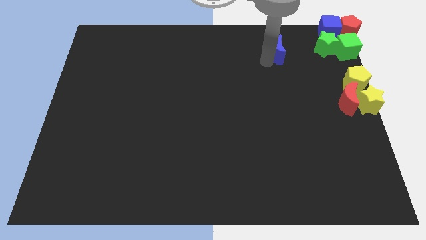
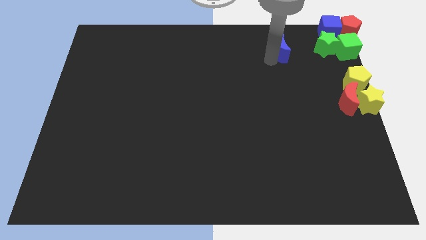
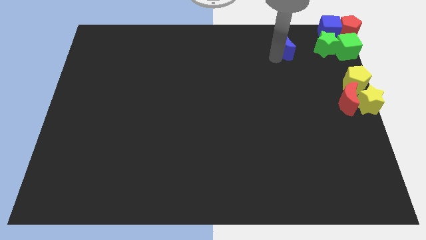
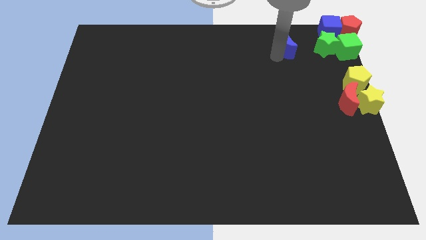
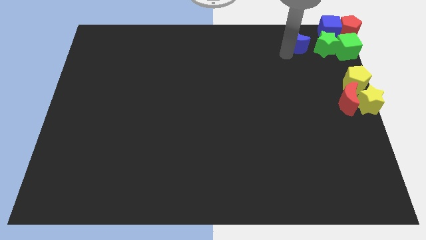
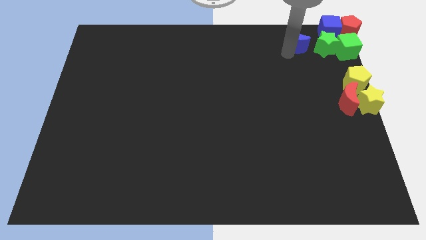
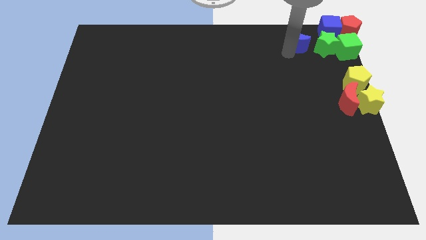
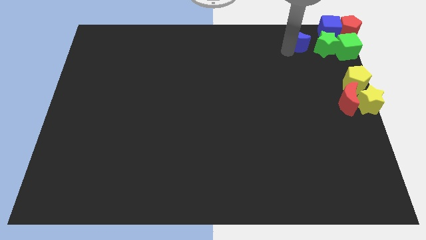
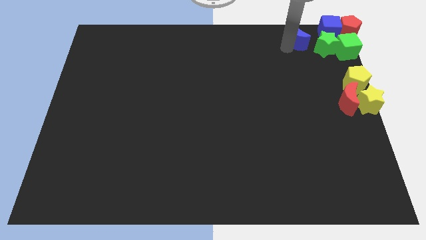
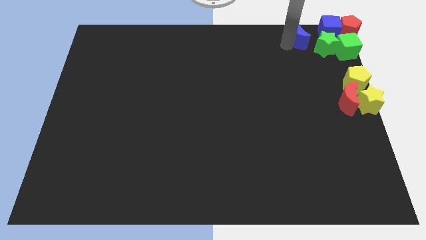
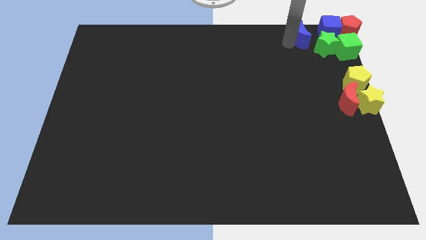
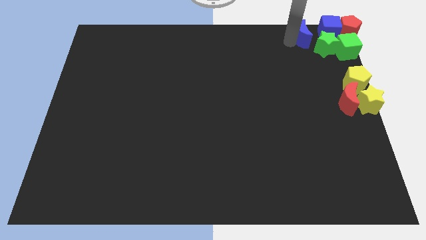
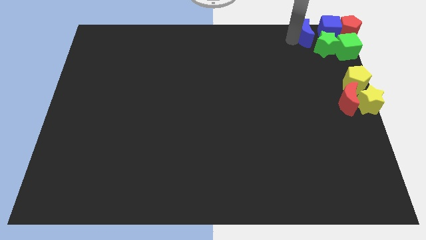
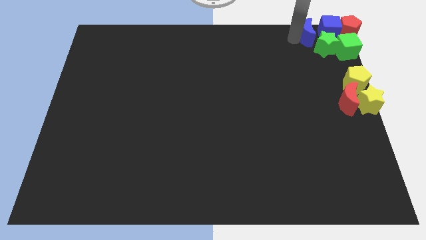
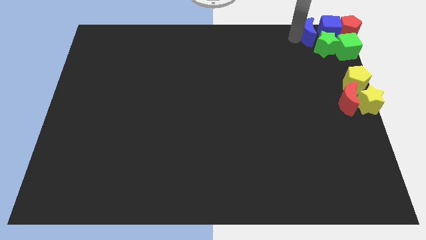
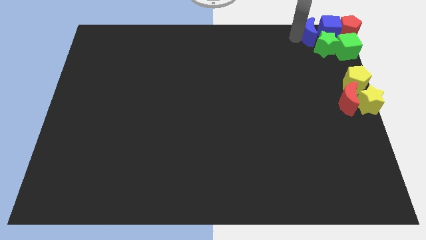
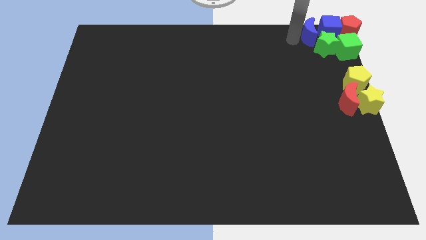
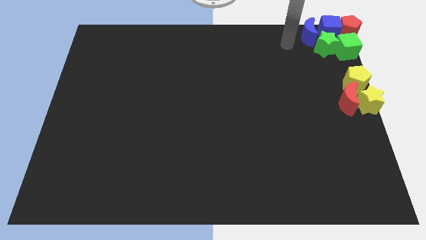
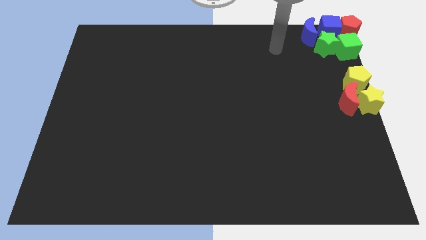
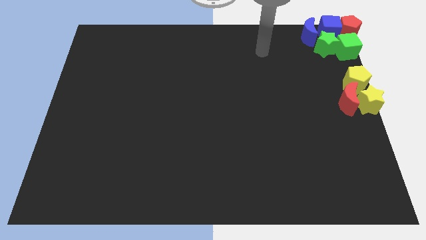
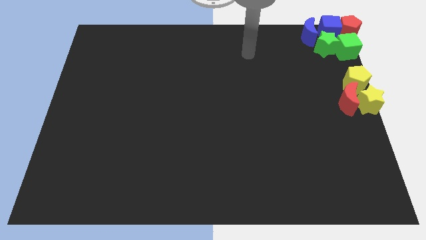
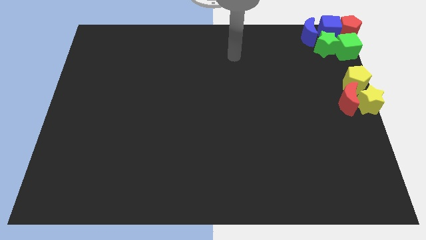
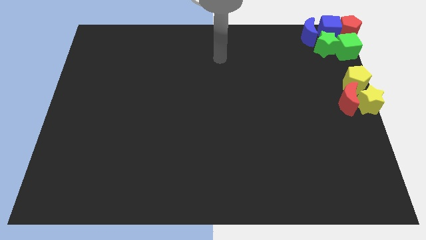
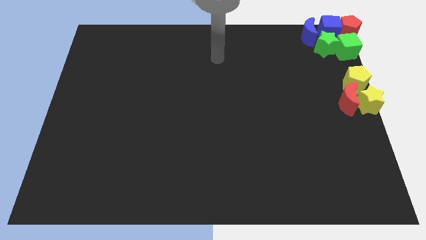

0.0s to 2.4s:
move the blue crescent to the left side of the blue cube

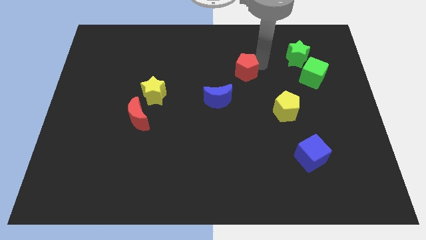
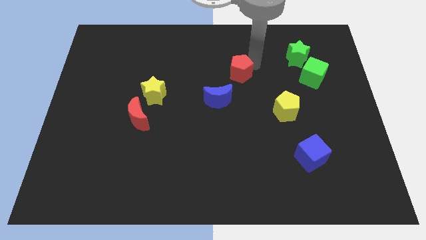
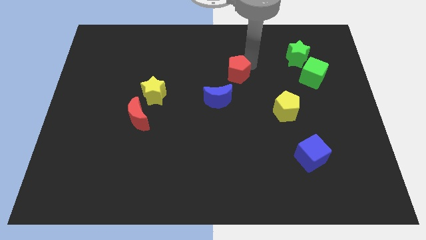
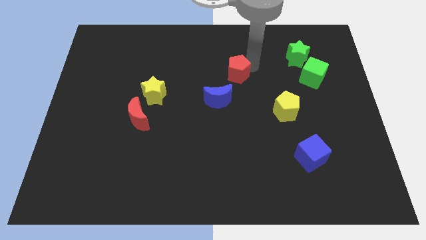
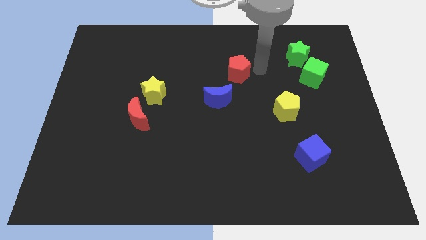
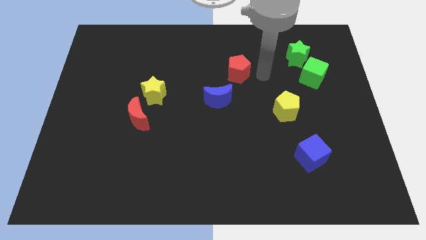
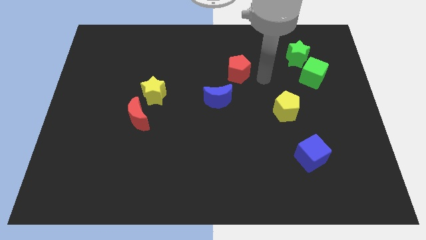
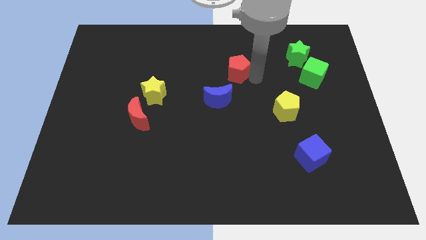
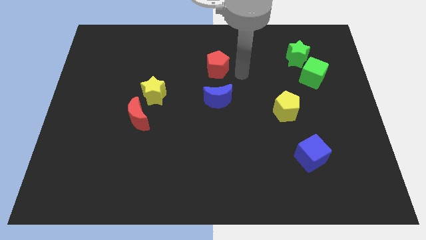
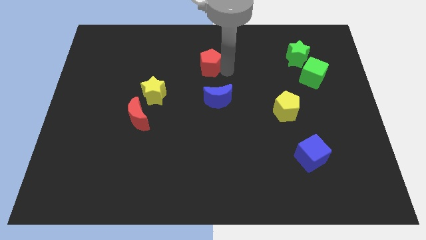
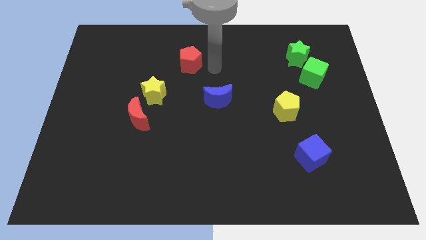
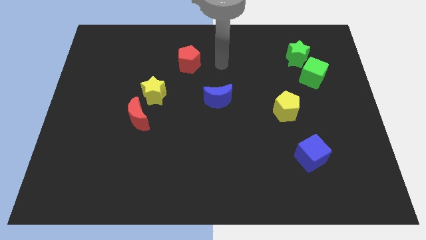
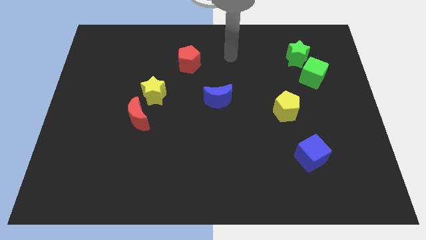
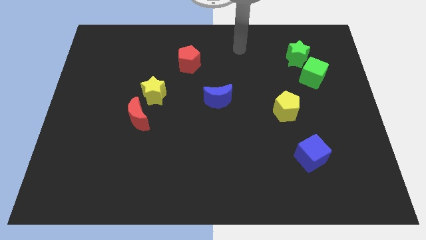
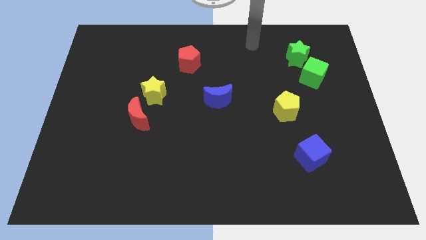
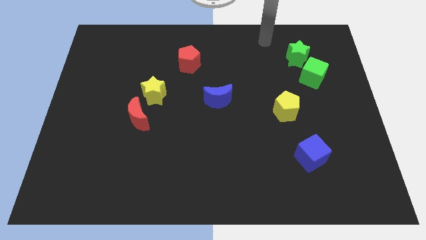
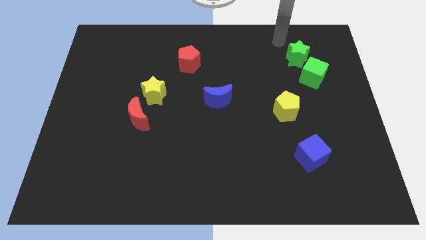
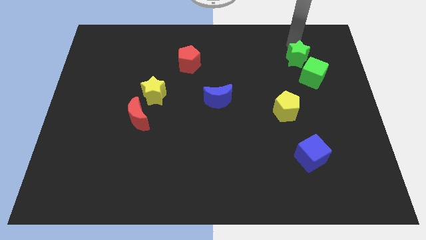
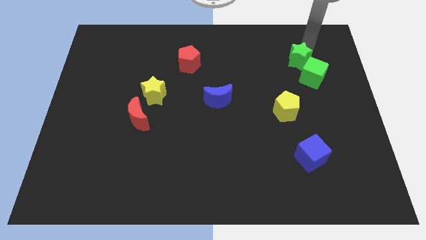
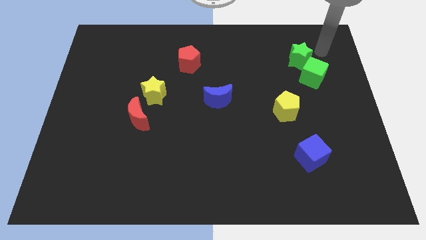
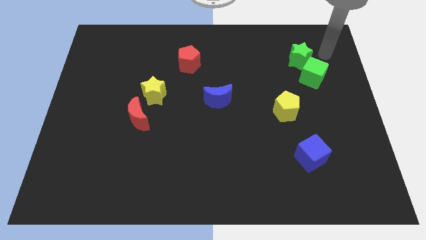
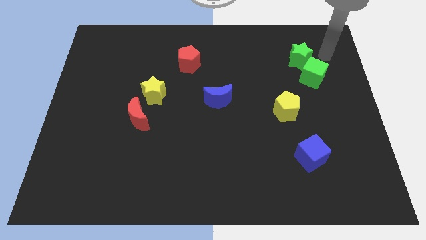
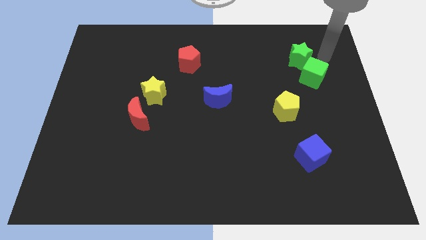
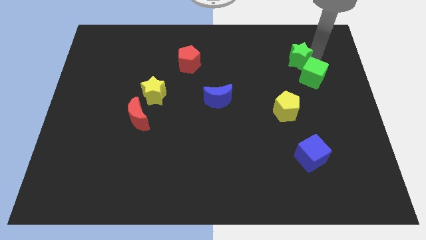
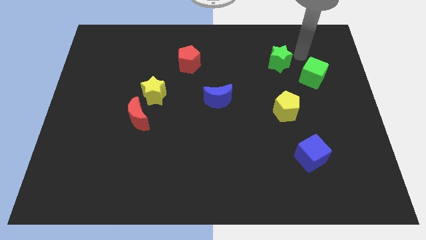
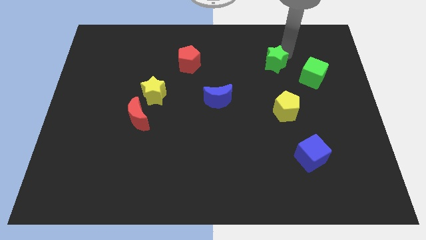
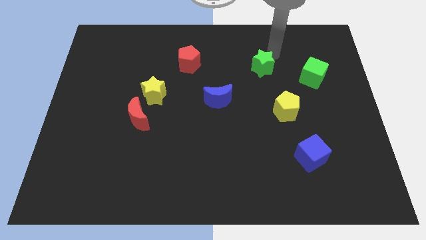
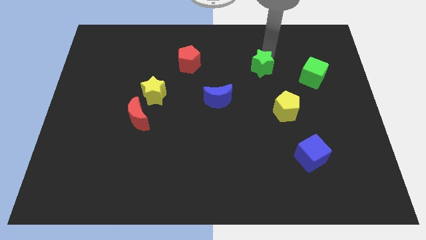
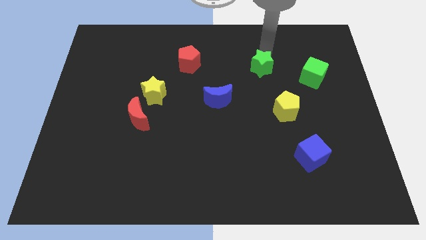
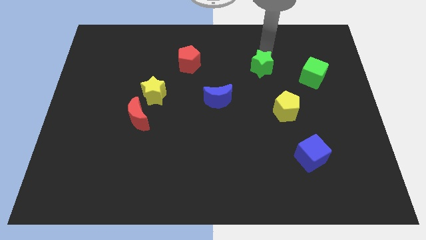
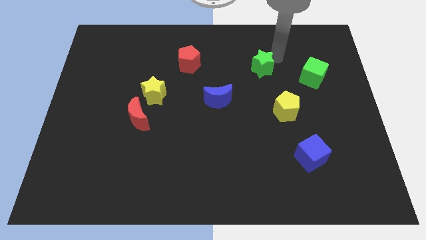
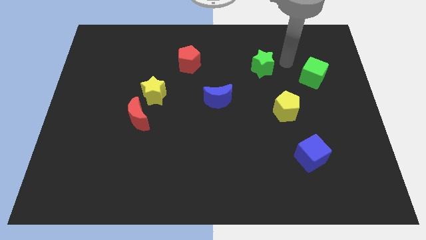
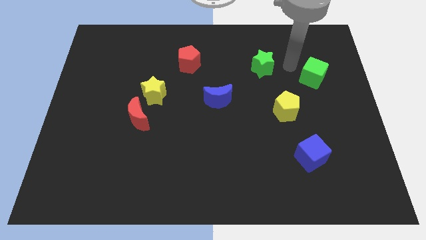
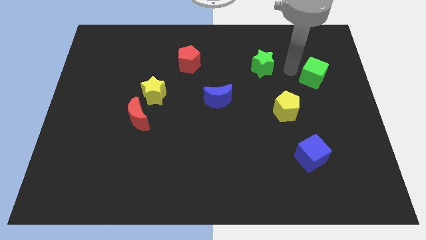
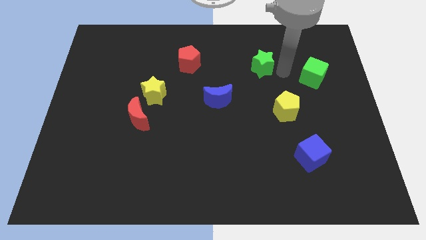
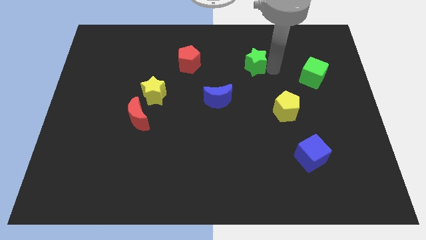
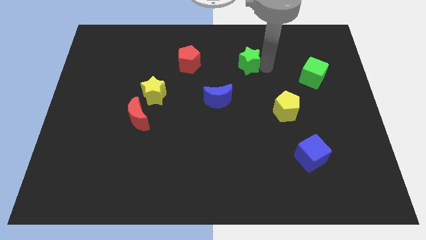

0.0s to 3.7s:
place the green star in between the green cube and red pentagon

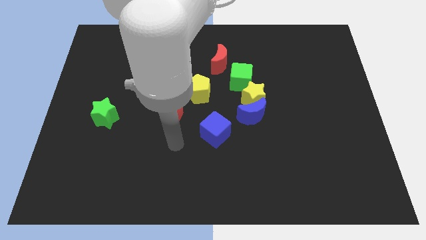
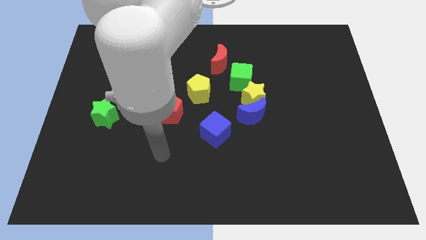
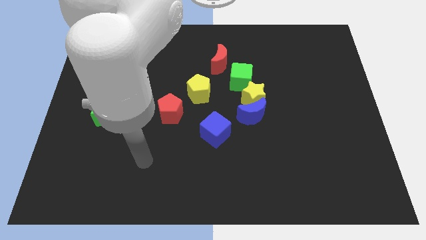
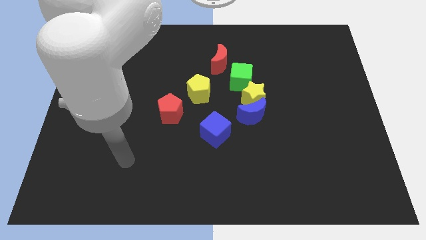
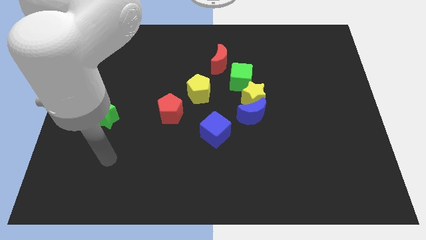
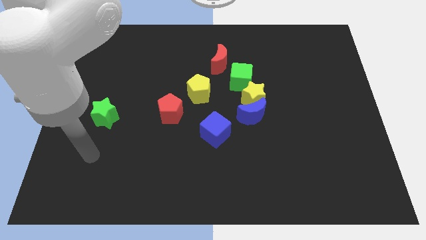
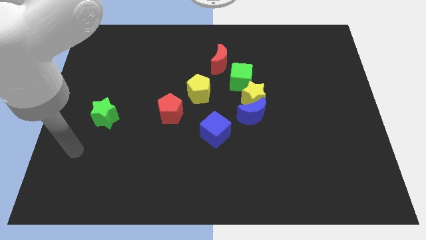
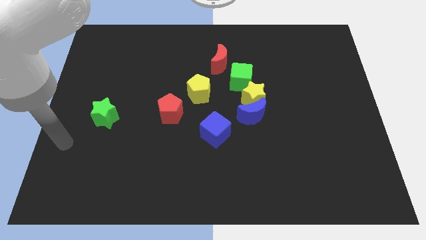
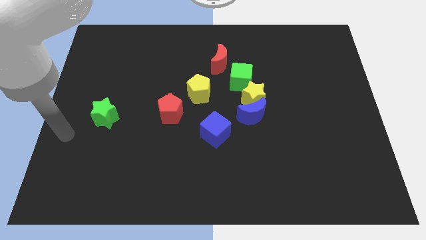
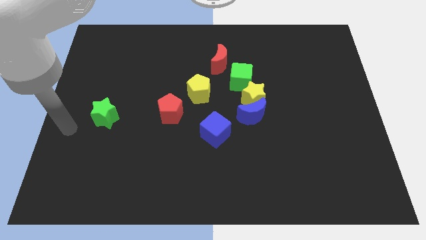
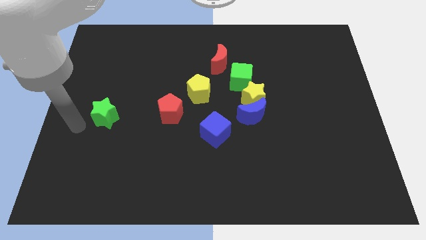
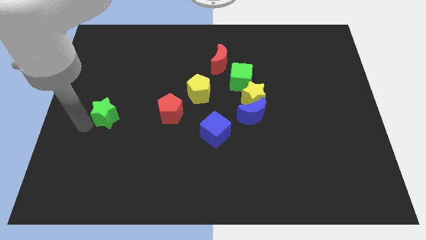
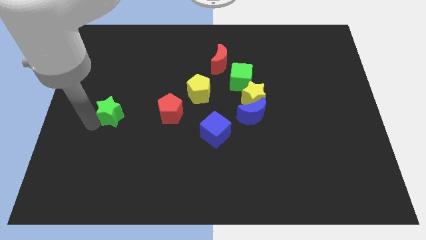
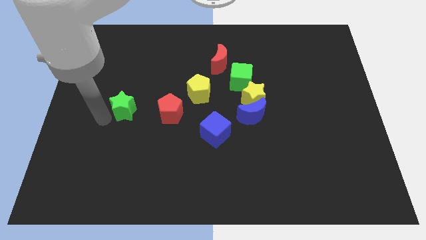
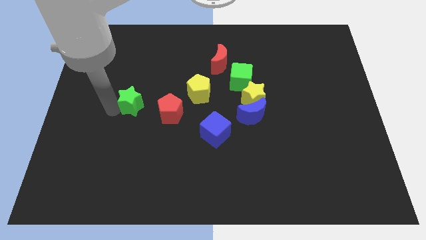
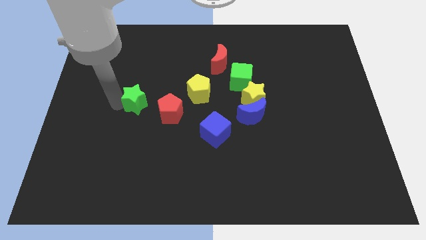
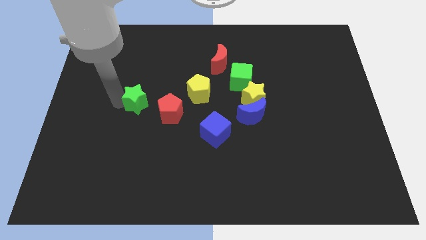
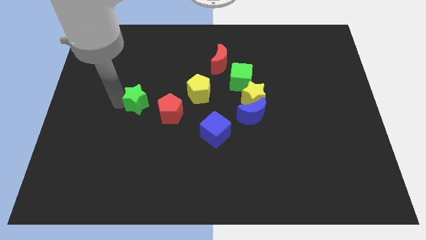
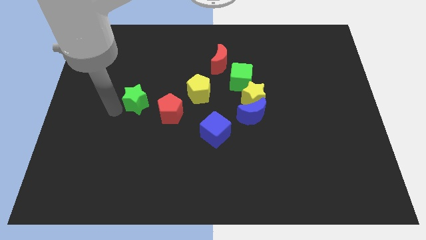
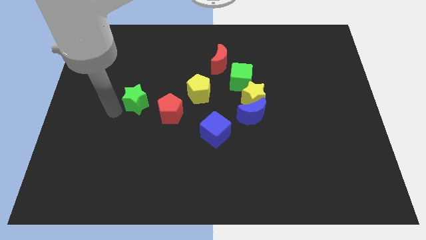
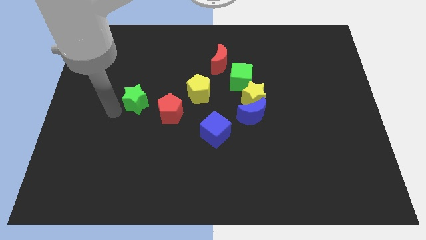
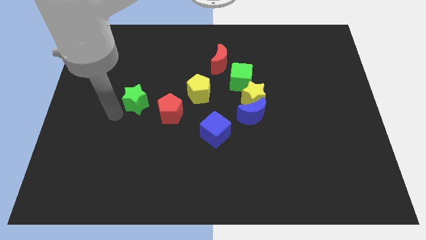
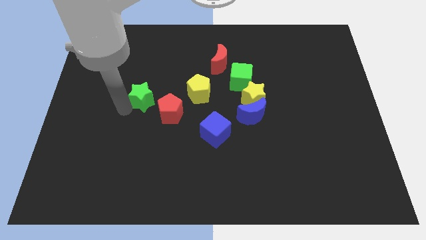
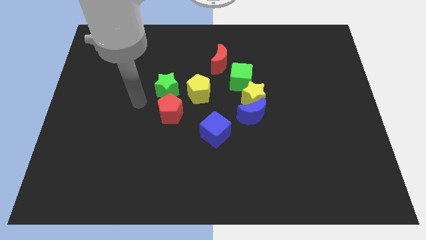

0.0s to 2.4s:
place the green star above the red pentagon

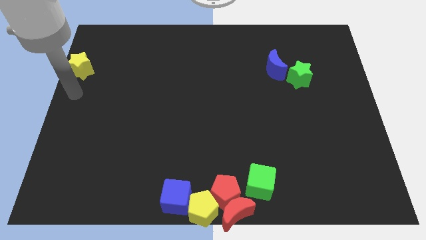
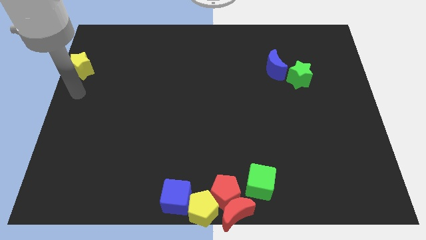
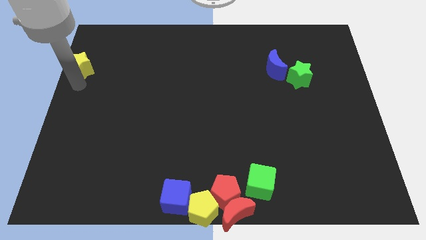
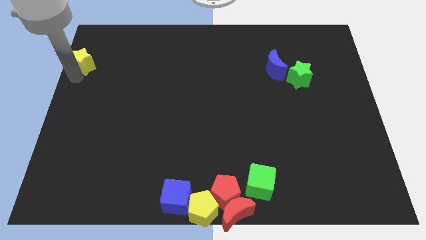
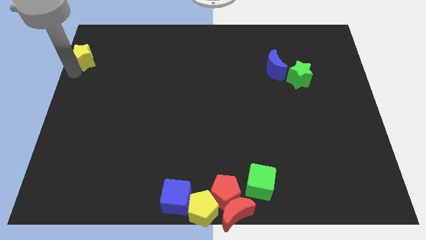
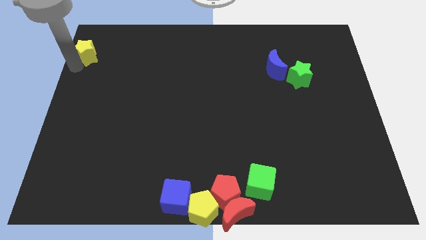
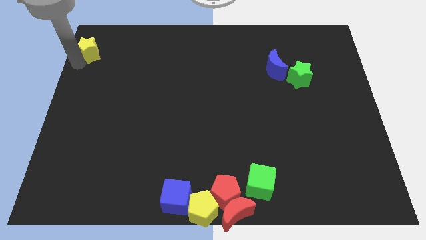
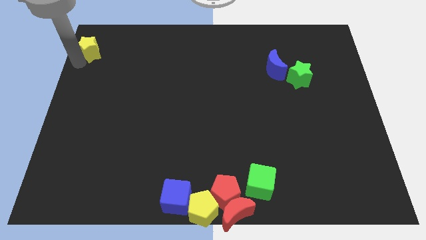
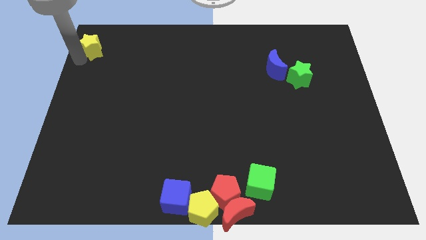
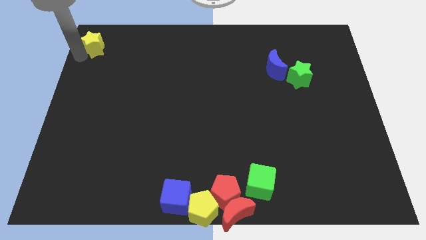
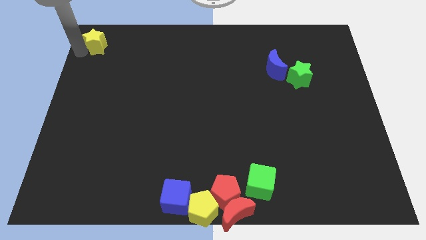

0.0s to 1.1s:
move yellow star to the top left corner
